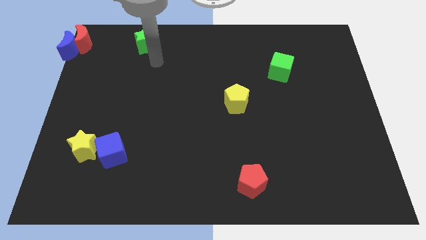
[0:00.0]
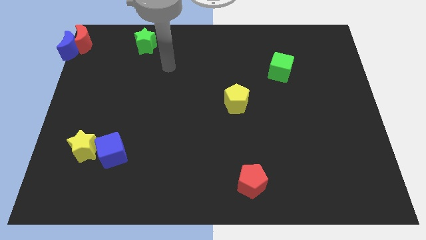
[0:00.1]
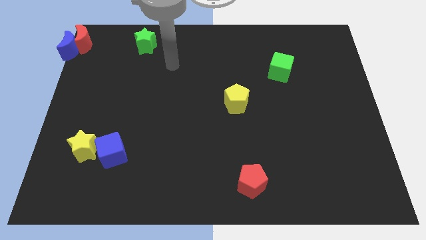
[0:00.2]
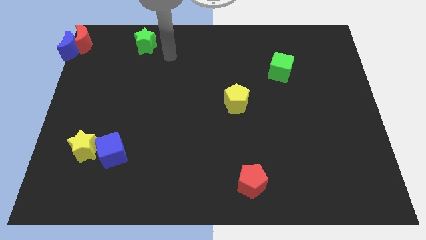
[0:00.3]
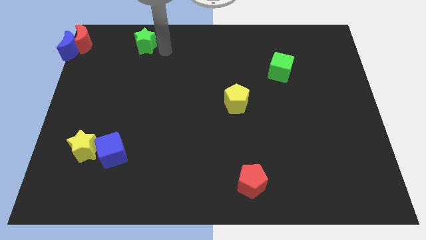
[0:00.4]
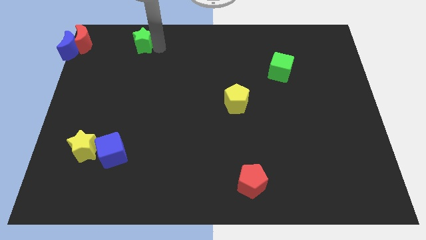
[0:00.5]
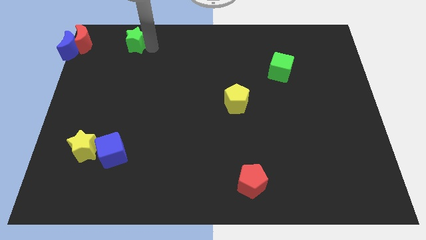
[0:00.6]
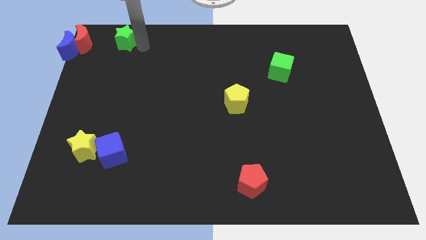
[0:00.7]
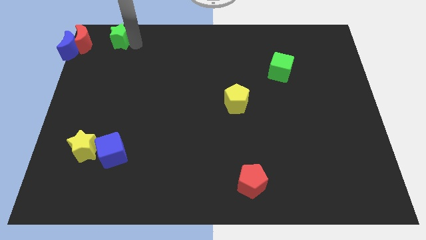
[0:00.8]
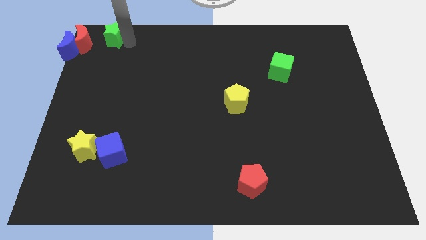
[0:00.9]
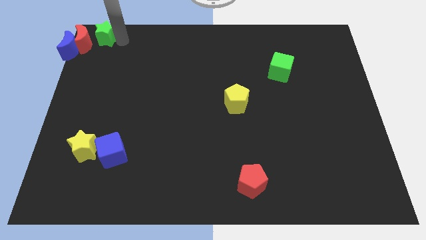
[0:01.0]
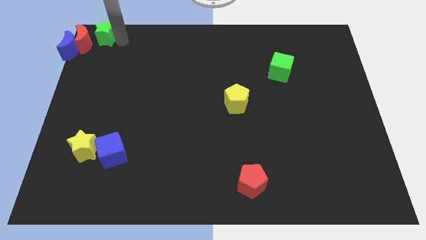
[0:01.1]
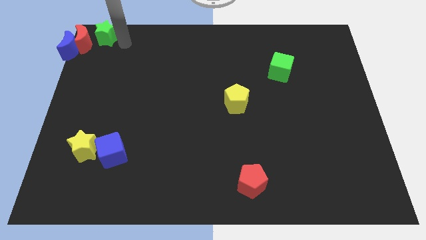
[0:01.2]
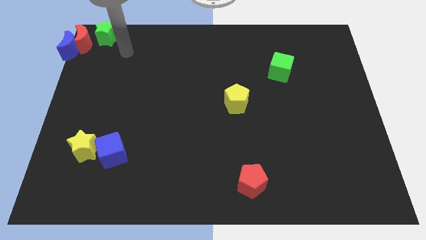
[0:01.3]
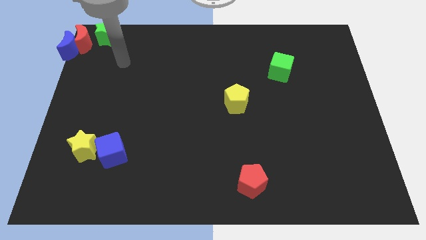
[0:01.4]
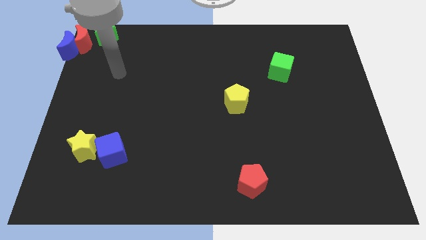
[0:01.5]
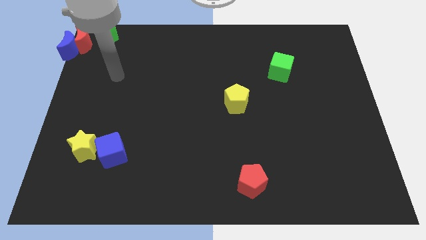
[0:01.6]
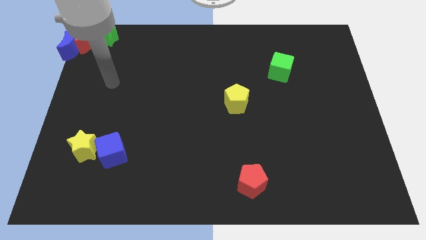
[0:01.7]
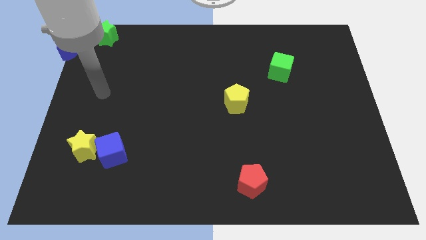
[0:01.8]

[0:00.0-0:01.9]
drag the green star to the top left corner of the board

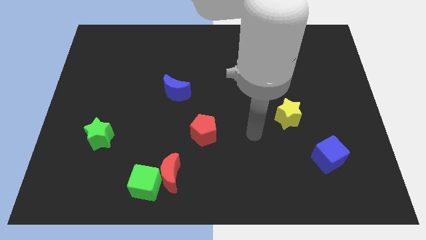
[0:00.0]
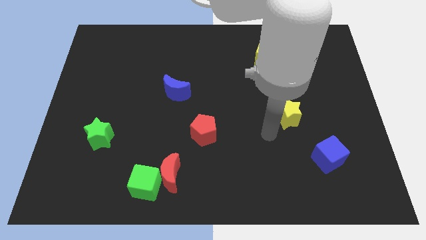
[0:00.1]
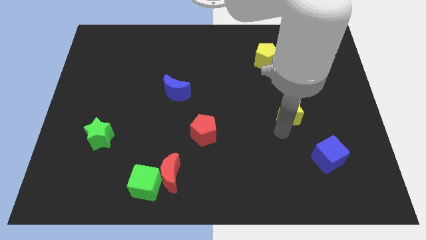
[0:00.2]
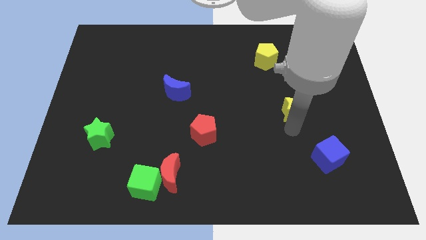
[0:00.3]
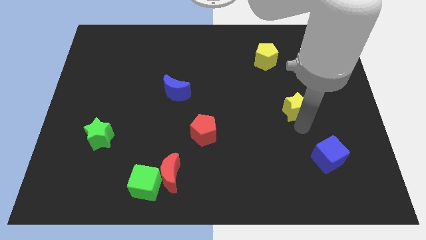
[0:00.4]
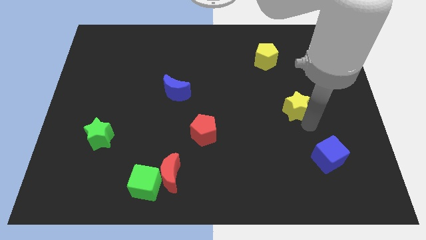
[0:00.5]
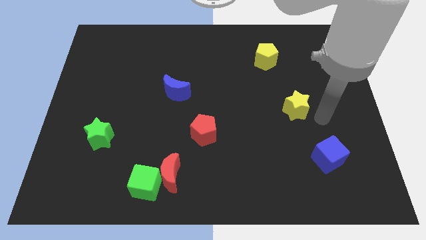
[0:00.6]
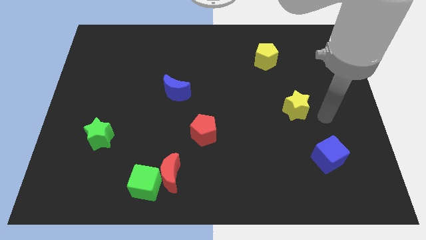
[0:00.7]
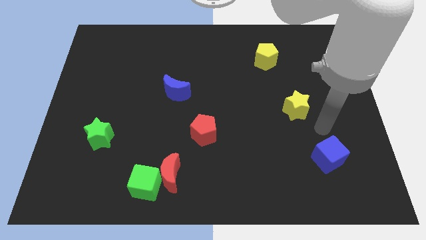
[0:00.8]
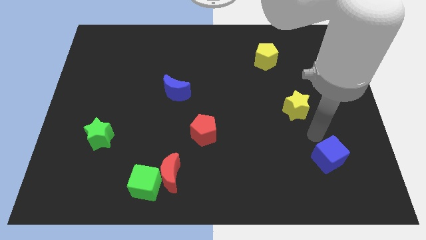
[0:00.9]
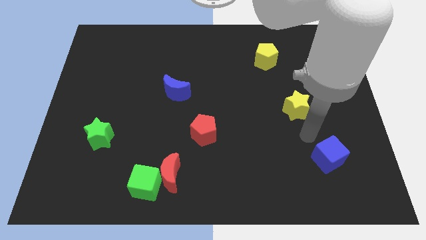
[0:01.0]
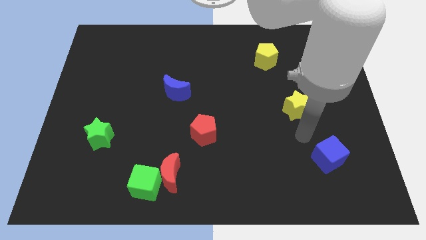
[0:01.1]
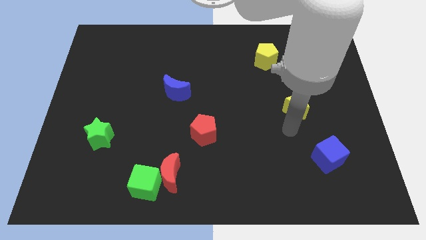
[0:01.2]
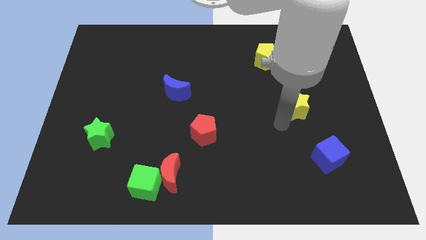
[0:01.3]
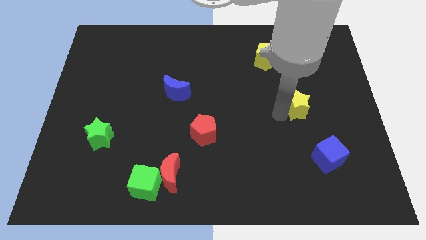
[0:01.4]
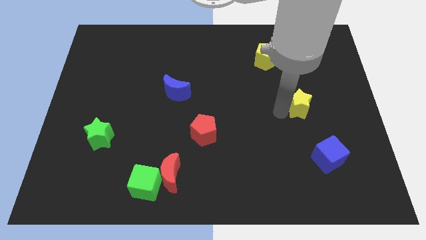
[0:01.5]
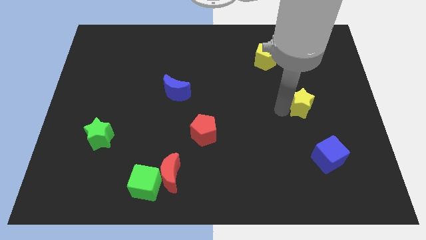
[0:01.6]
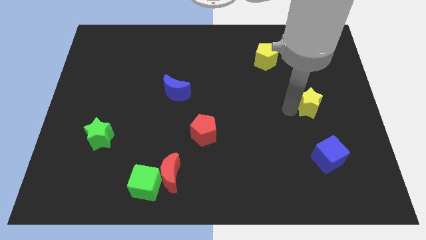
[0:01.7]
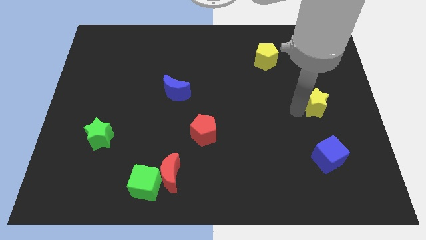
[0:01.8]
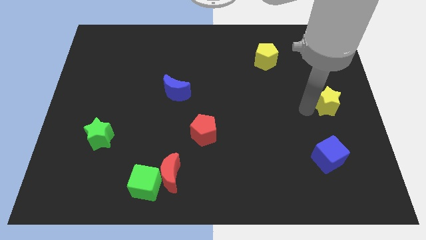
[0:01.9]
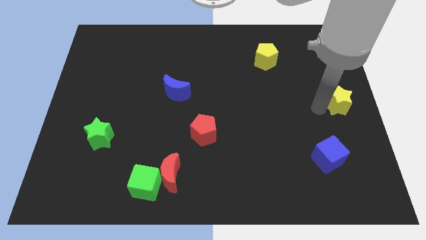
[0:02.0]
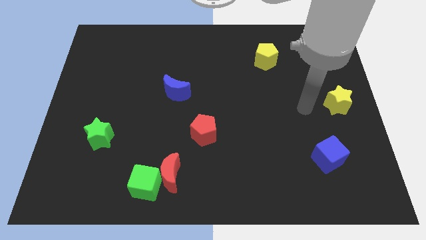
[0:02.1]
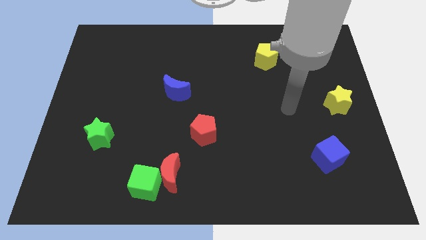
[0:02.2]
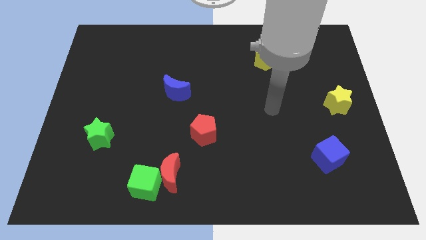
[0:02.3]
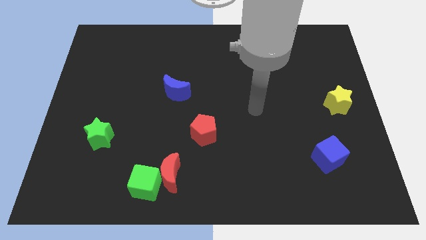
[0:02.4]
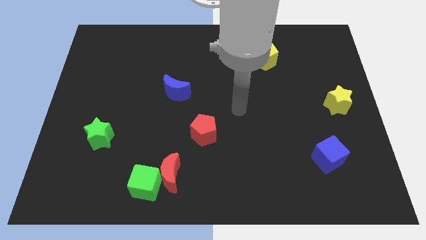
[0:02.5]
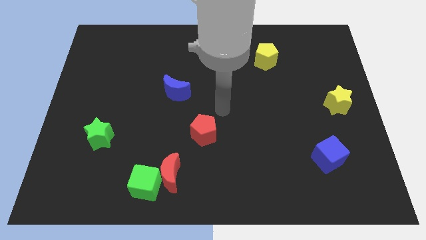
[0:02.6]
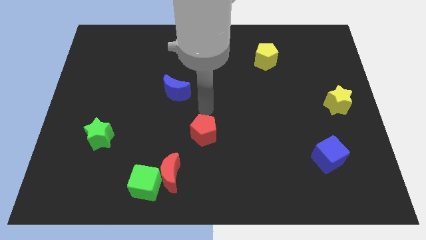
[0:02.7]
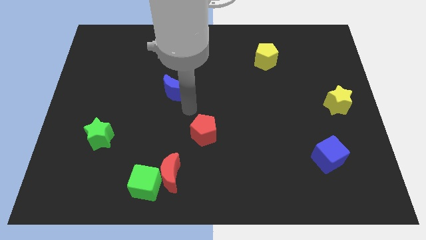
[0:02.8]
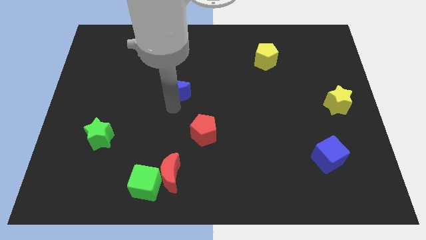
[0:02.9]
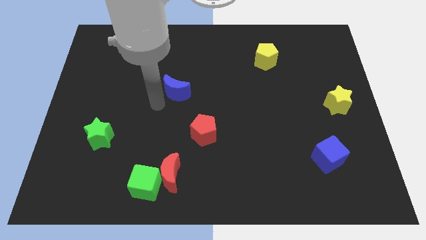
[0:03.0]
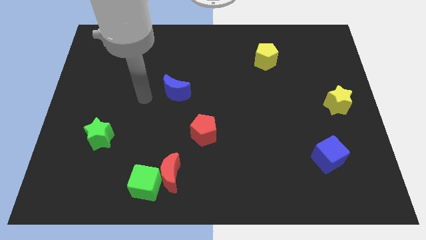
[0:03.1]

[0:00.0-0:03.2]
move the yellow star towards the center right

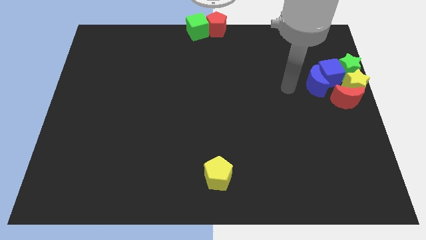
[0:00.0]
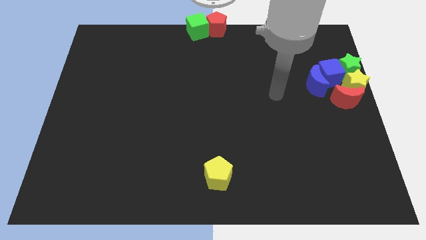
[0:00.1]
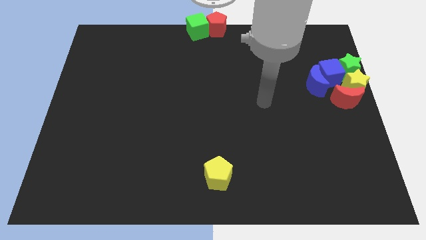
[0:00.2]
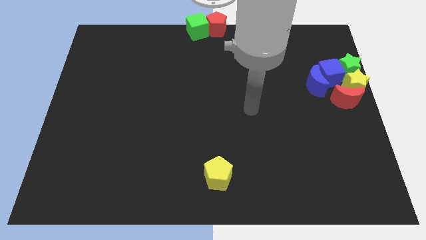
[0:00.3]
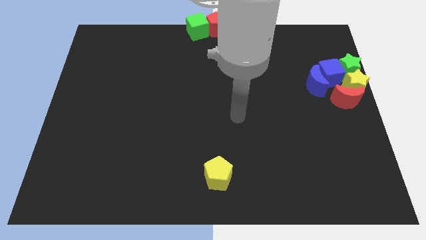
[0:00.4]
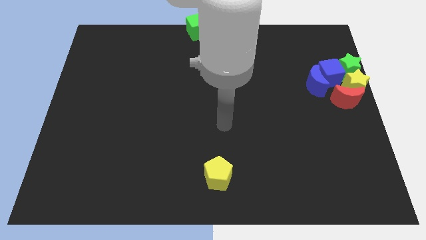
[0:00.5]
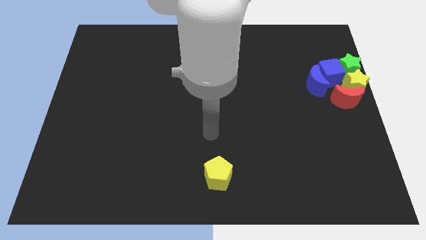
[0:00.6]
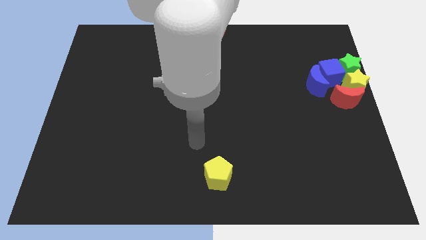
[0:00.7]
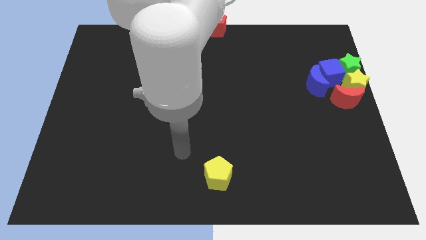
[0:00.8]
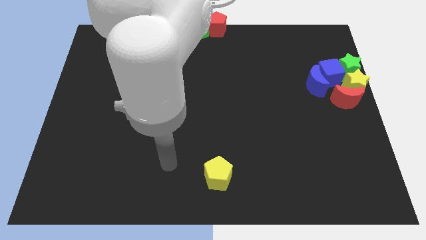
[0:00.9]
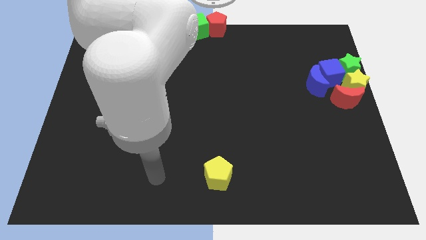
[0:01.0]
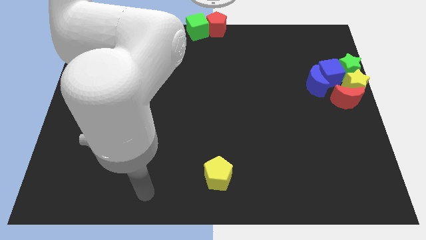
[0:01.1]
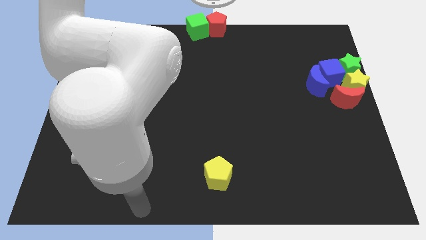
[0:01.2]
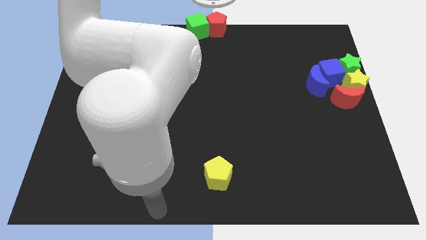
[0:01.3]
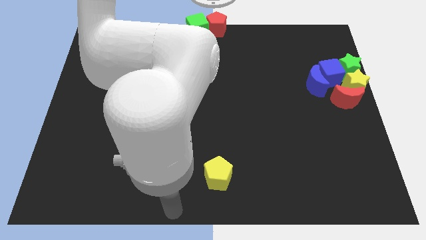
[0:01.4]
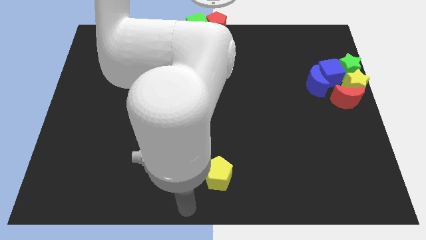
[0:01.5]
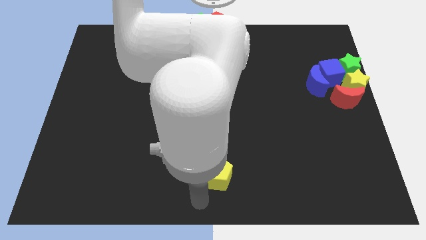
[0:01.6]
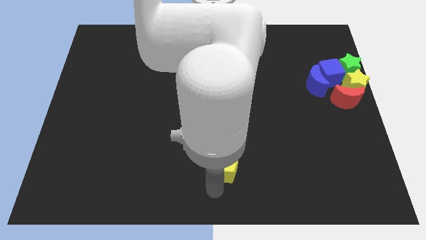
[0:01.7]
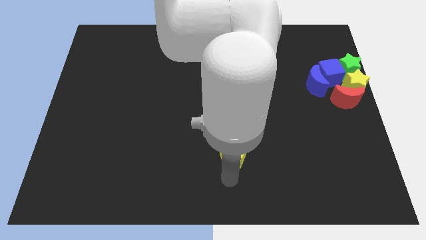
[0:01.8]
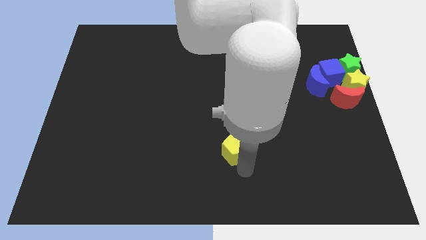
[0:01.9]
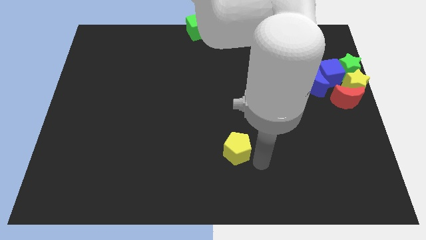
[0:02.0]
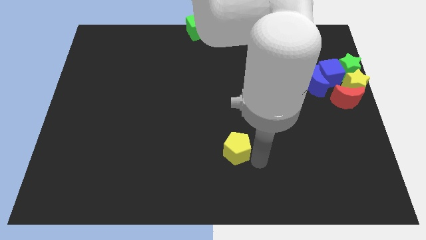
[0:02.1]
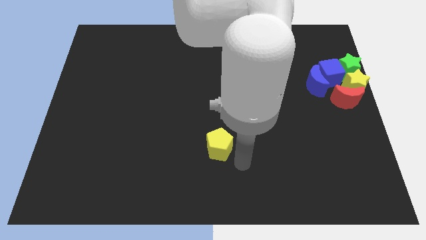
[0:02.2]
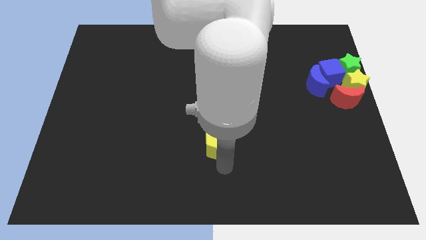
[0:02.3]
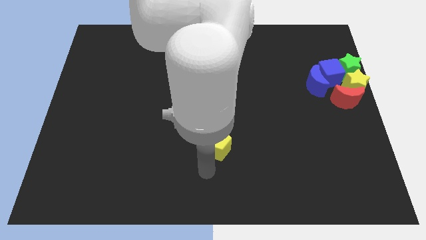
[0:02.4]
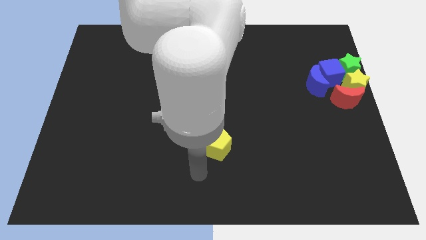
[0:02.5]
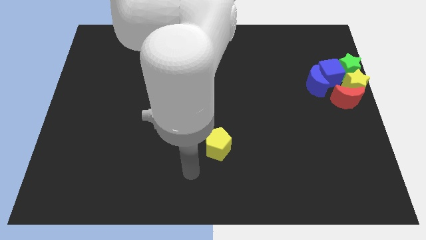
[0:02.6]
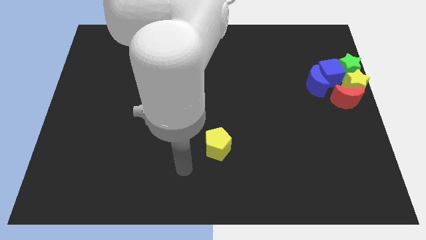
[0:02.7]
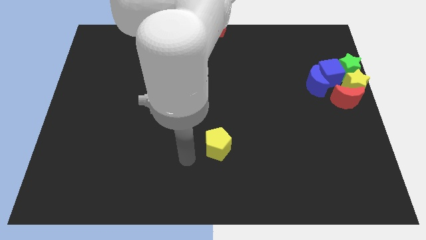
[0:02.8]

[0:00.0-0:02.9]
push yellow pentagon upwards

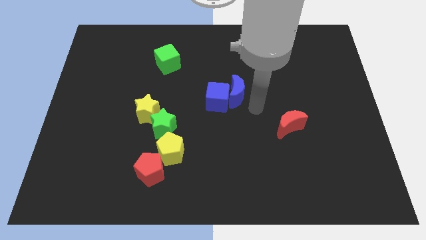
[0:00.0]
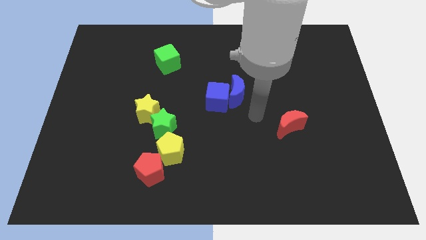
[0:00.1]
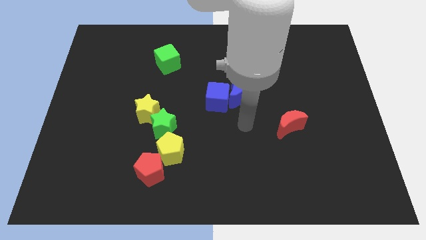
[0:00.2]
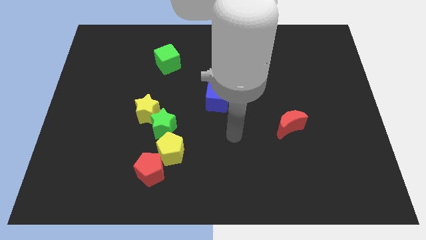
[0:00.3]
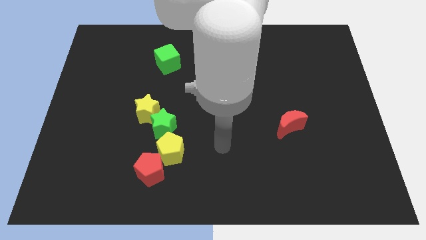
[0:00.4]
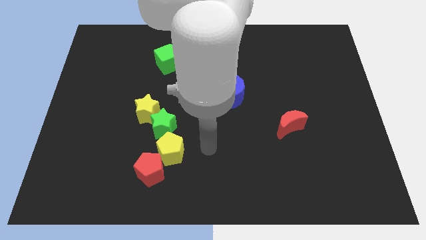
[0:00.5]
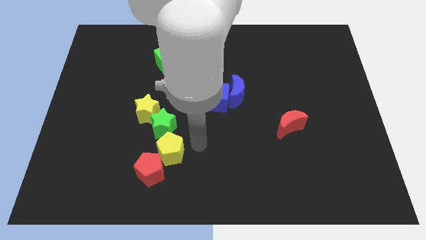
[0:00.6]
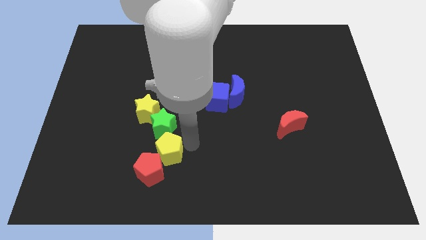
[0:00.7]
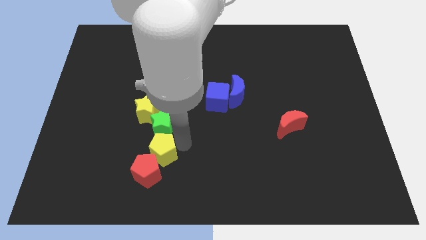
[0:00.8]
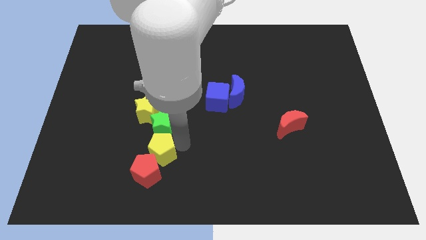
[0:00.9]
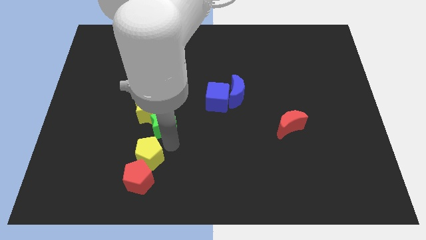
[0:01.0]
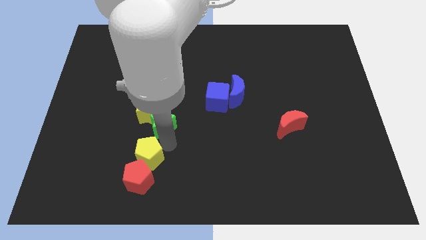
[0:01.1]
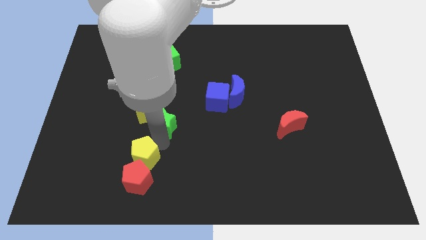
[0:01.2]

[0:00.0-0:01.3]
place the yellow pentagon above the red pentagon
